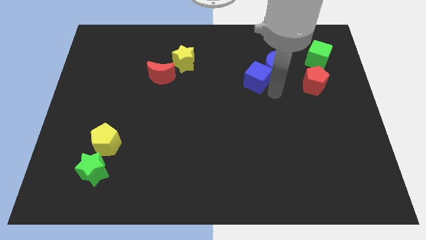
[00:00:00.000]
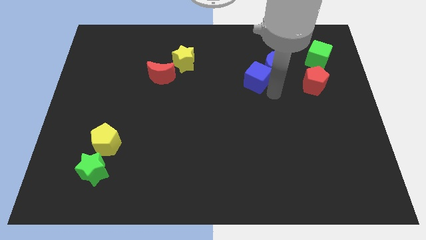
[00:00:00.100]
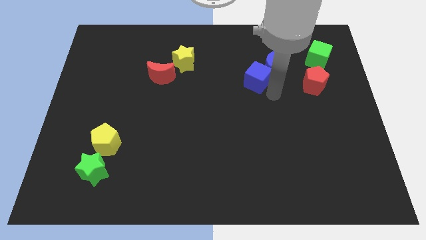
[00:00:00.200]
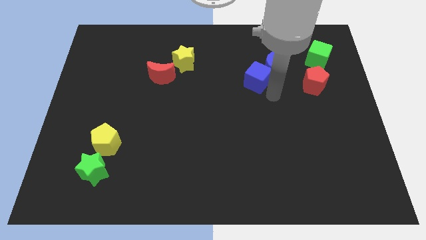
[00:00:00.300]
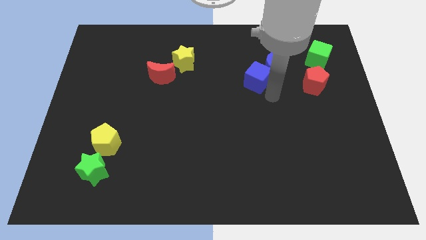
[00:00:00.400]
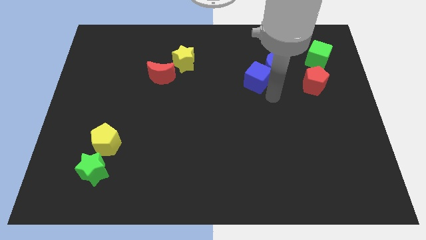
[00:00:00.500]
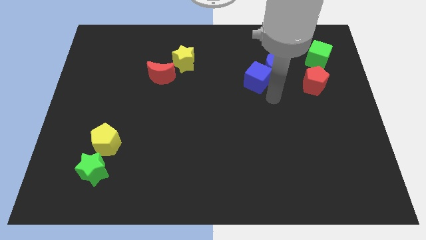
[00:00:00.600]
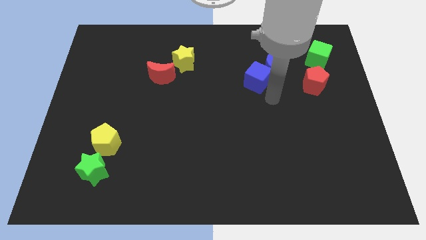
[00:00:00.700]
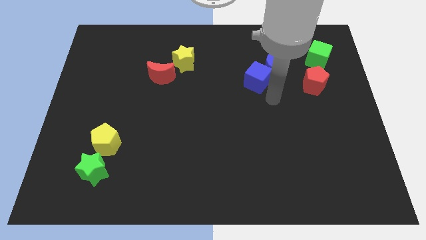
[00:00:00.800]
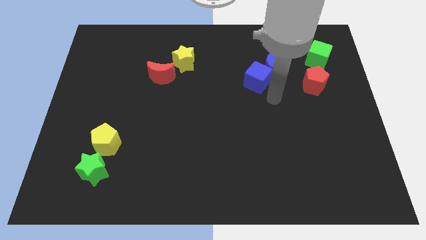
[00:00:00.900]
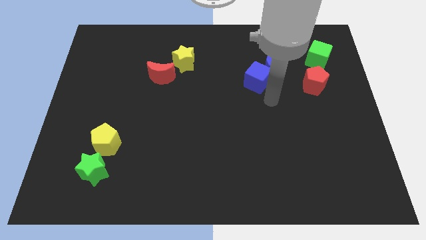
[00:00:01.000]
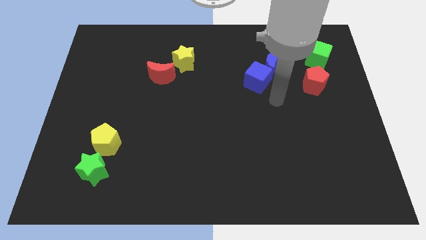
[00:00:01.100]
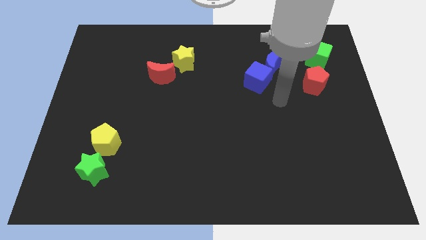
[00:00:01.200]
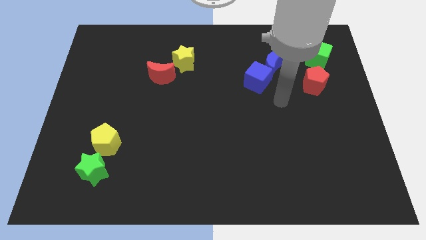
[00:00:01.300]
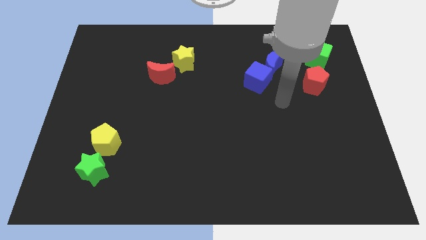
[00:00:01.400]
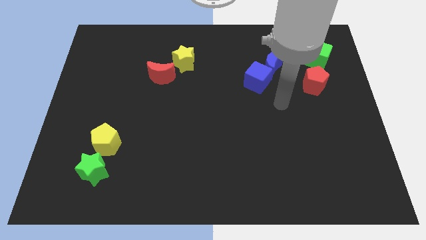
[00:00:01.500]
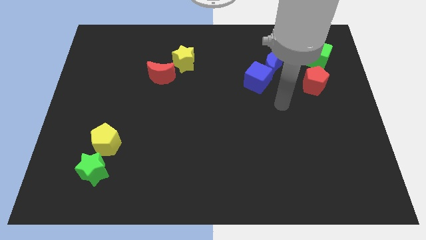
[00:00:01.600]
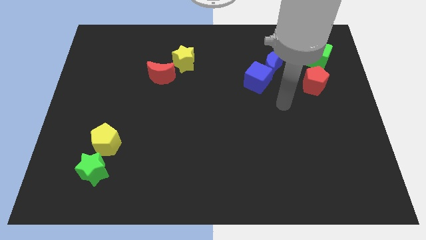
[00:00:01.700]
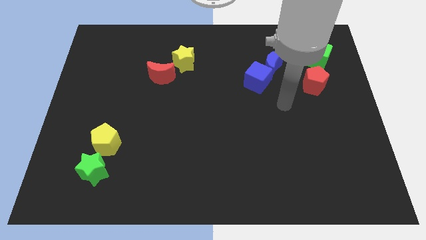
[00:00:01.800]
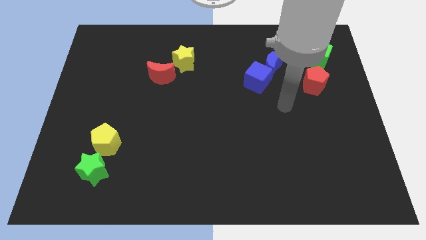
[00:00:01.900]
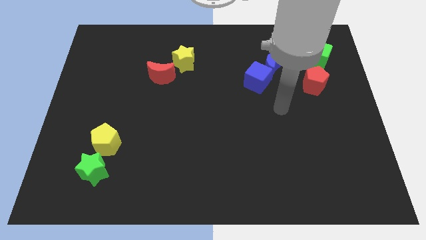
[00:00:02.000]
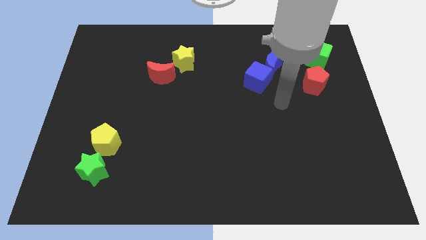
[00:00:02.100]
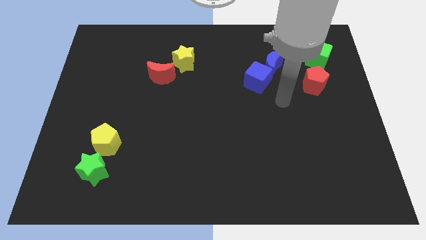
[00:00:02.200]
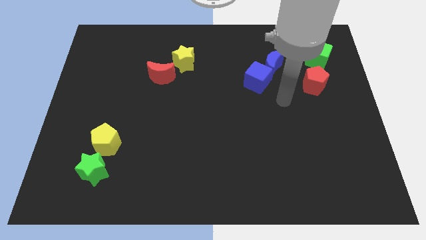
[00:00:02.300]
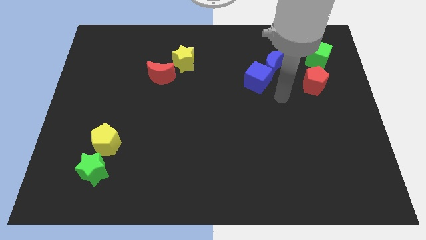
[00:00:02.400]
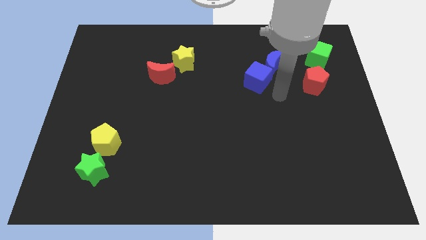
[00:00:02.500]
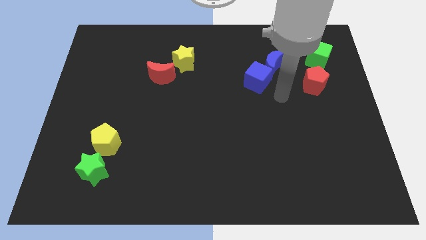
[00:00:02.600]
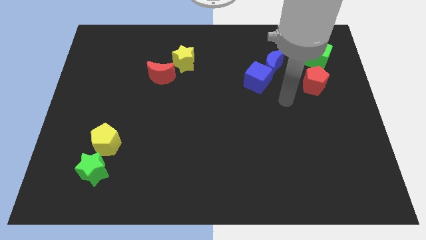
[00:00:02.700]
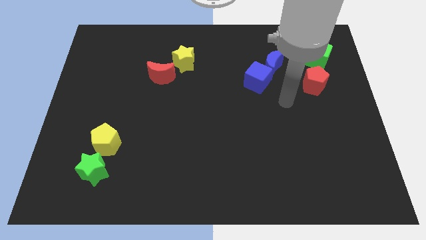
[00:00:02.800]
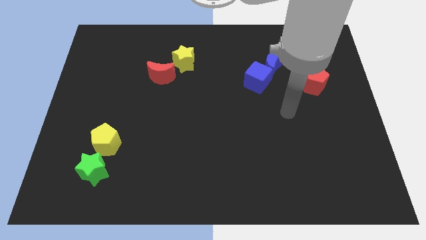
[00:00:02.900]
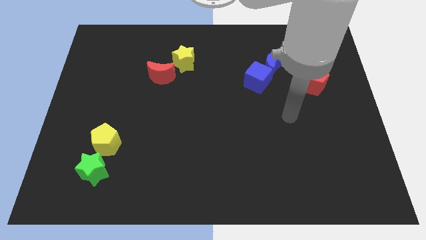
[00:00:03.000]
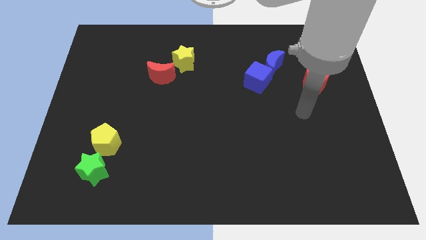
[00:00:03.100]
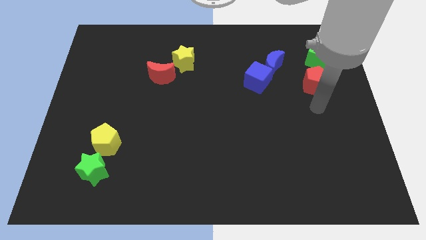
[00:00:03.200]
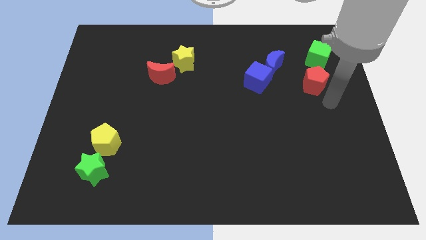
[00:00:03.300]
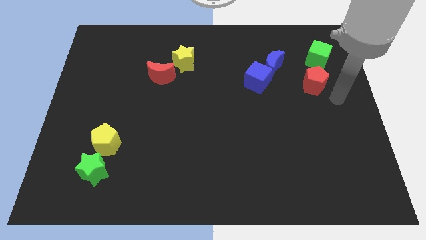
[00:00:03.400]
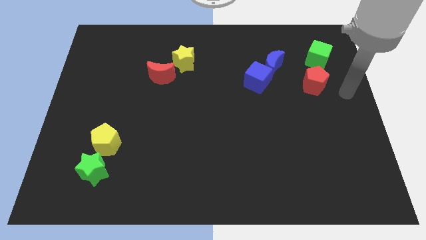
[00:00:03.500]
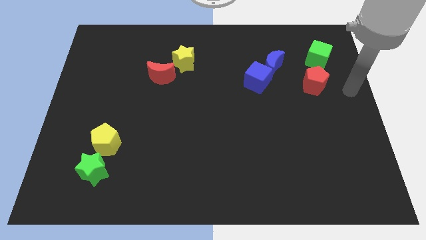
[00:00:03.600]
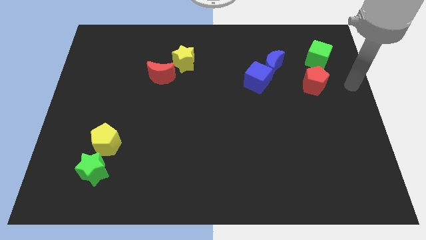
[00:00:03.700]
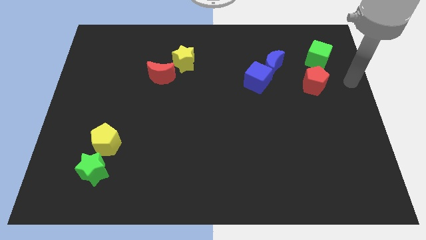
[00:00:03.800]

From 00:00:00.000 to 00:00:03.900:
place your arm at the right of the red pentagon

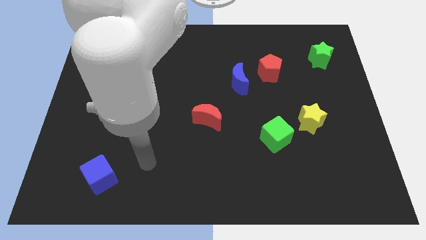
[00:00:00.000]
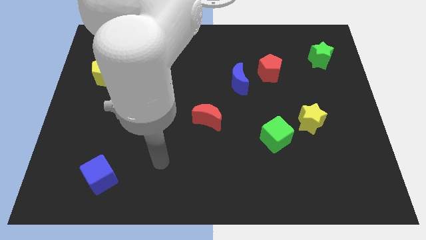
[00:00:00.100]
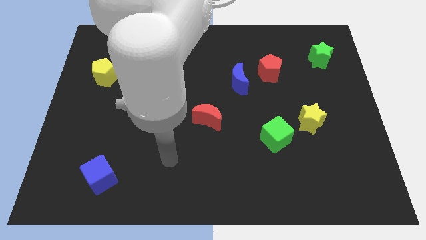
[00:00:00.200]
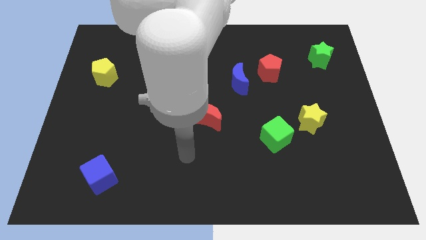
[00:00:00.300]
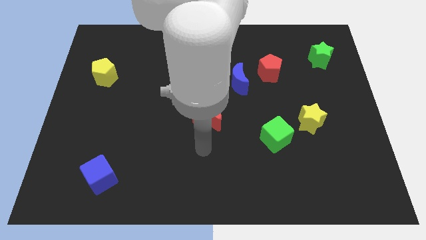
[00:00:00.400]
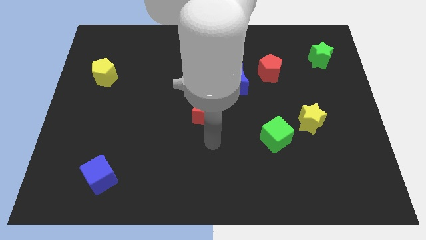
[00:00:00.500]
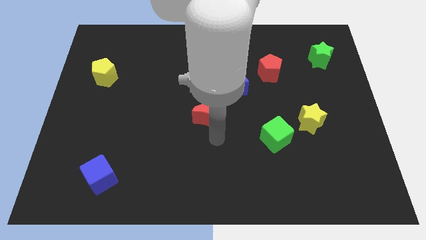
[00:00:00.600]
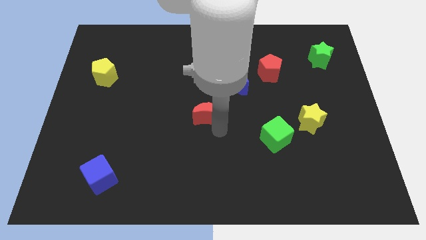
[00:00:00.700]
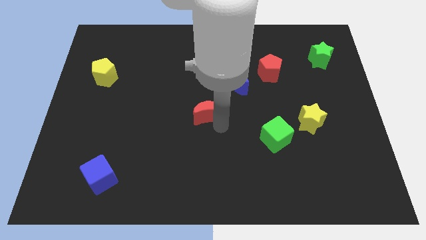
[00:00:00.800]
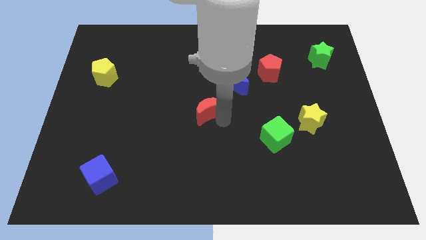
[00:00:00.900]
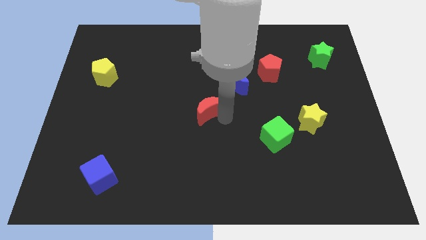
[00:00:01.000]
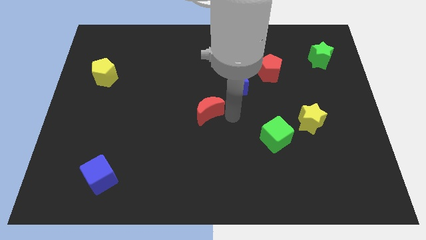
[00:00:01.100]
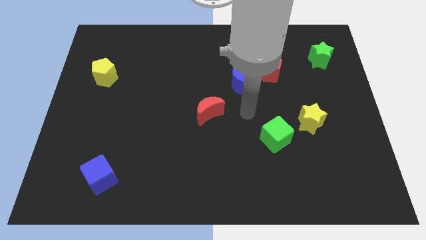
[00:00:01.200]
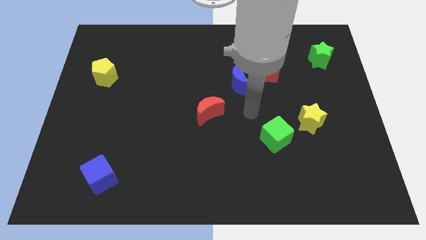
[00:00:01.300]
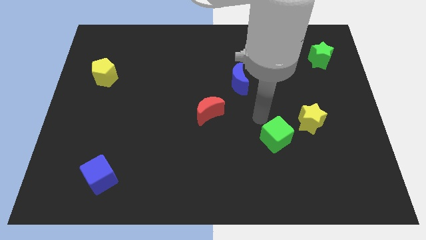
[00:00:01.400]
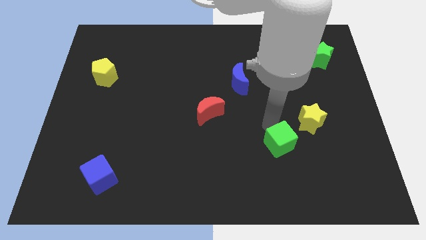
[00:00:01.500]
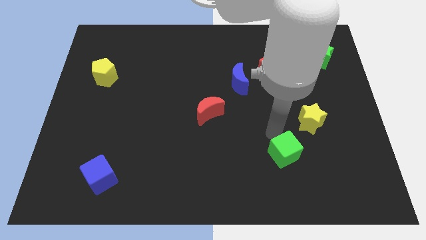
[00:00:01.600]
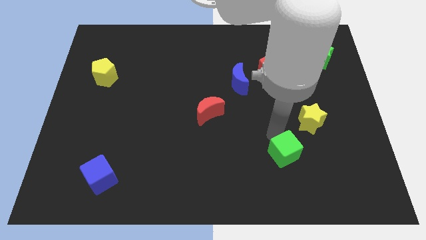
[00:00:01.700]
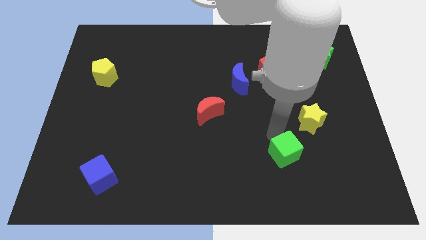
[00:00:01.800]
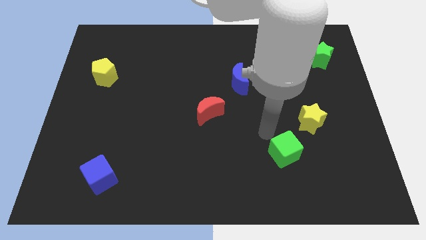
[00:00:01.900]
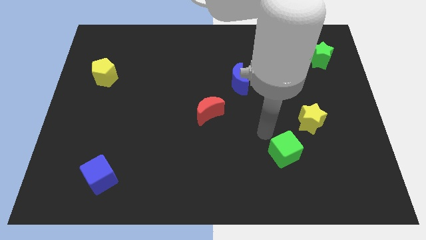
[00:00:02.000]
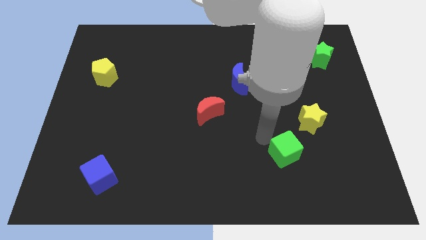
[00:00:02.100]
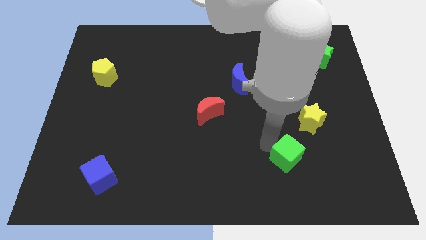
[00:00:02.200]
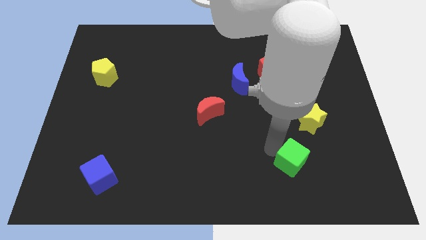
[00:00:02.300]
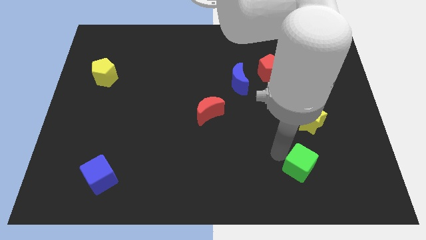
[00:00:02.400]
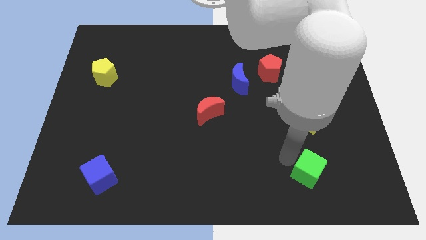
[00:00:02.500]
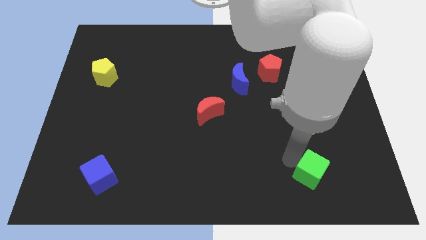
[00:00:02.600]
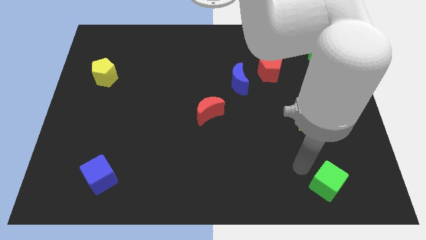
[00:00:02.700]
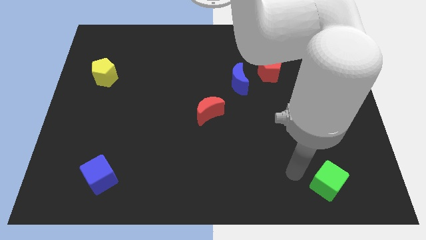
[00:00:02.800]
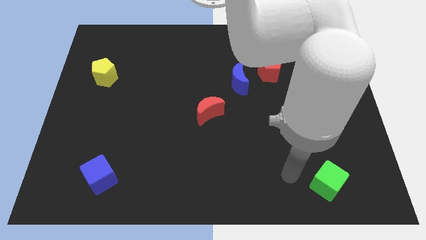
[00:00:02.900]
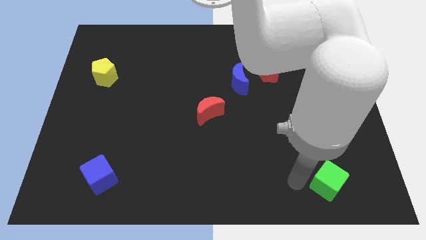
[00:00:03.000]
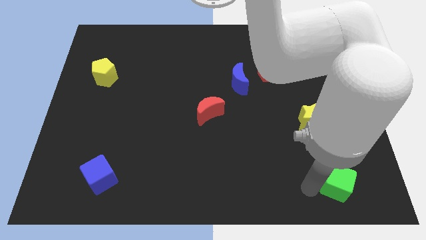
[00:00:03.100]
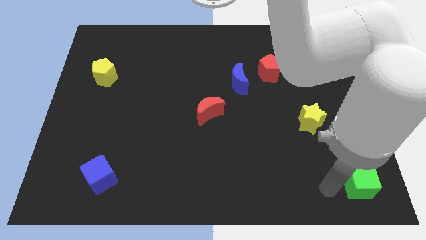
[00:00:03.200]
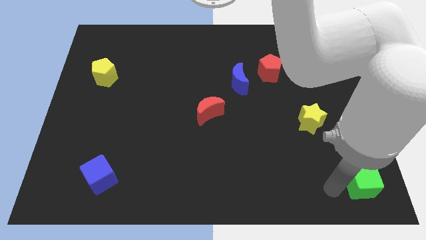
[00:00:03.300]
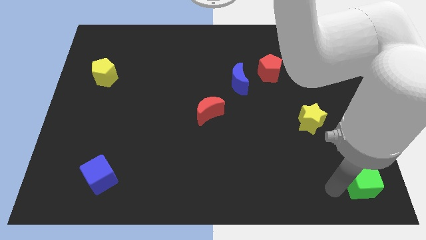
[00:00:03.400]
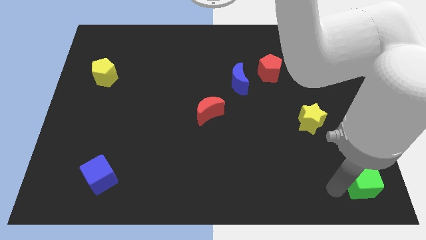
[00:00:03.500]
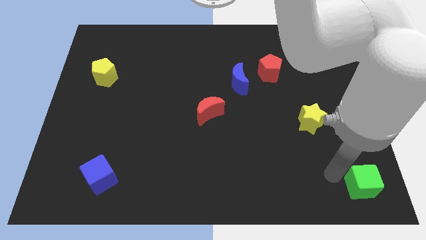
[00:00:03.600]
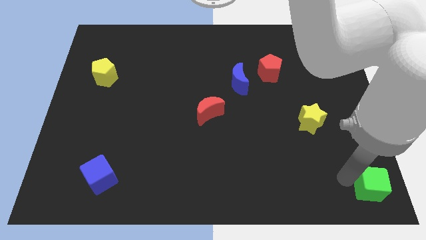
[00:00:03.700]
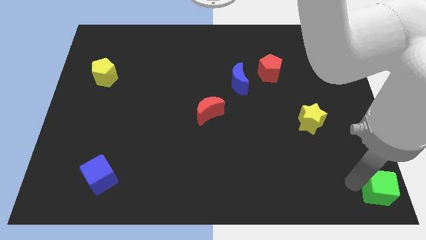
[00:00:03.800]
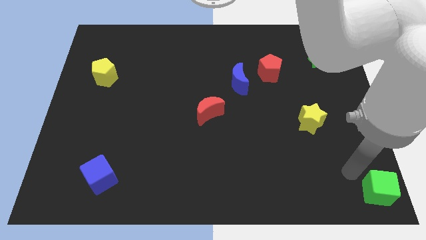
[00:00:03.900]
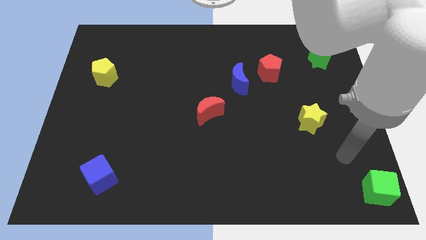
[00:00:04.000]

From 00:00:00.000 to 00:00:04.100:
place the green cube to the bottom right of the board

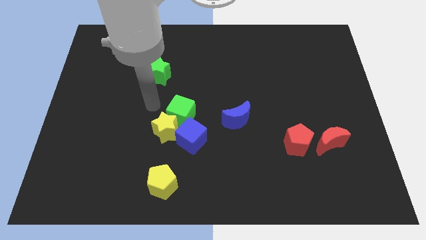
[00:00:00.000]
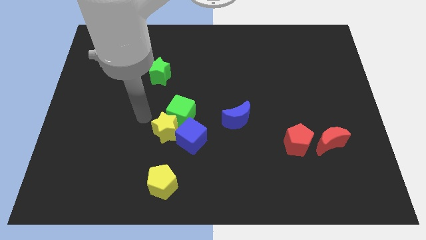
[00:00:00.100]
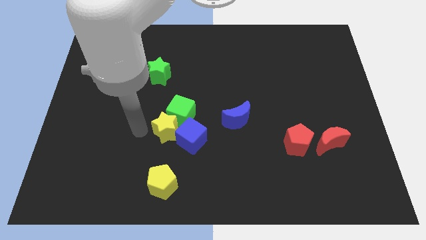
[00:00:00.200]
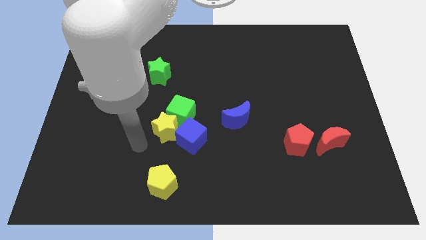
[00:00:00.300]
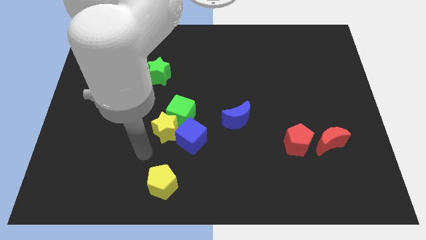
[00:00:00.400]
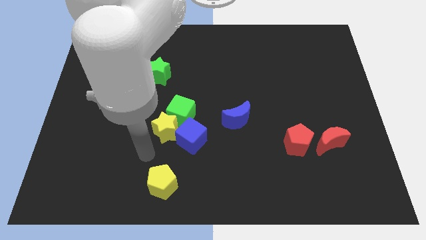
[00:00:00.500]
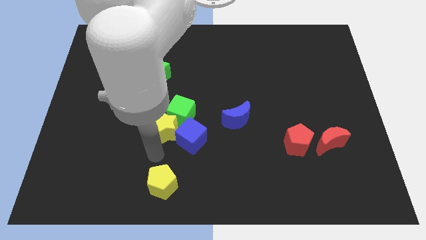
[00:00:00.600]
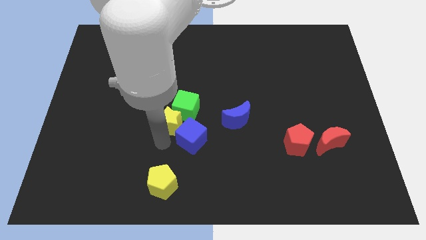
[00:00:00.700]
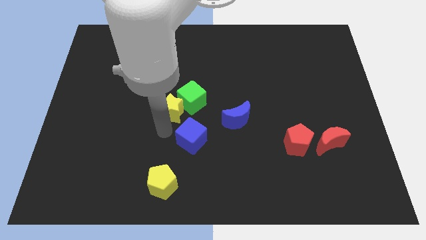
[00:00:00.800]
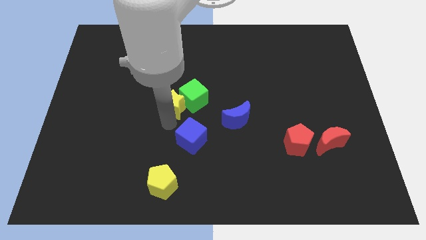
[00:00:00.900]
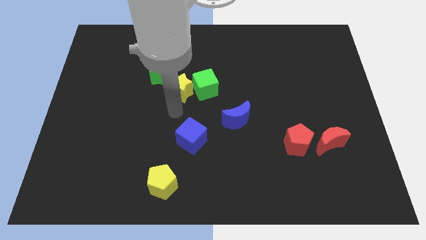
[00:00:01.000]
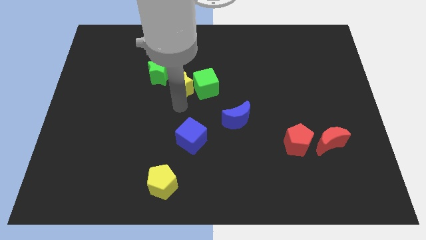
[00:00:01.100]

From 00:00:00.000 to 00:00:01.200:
push the yellow star and green cube away from the blue cube
